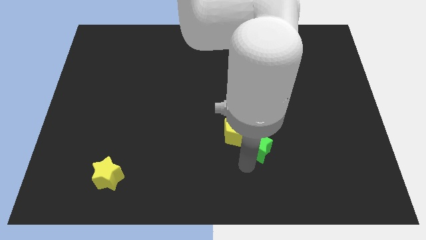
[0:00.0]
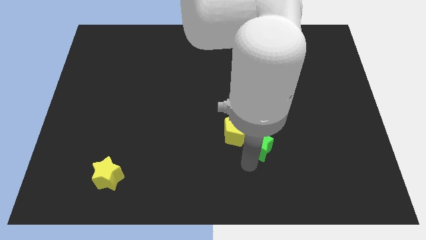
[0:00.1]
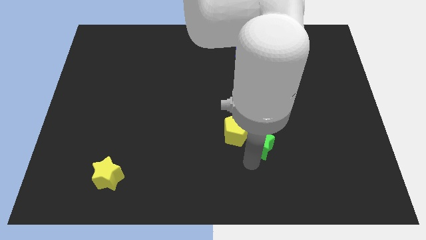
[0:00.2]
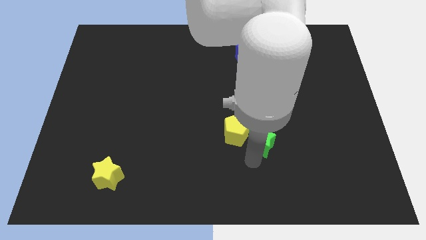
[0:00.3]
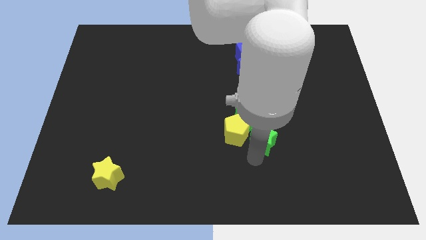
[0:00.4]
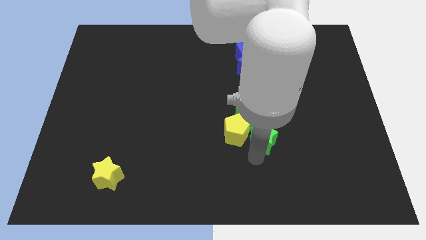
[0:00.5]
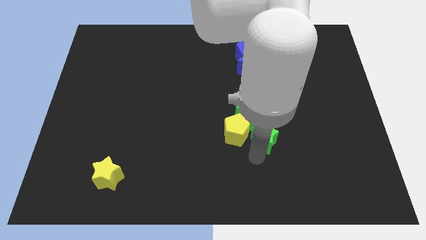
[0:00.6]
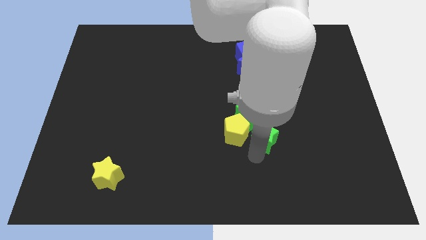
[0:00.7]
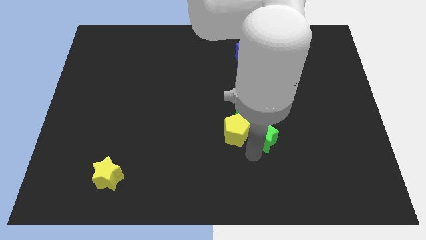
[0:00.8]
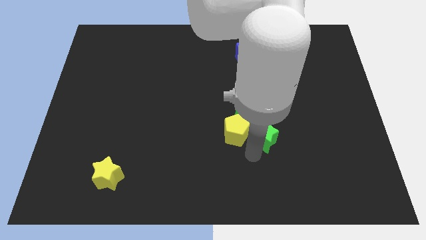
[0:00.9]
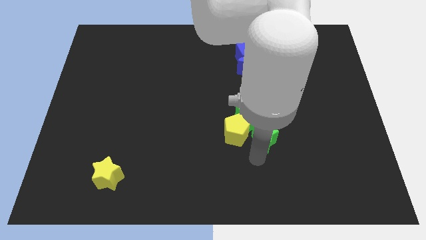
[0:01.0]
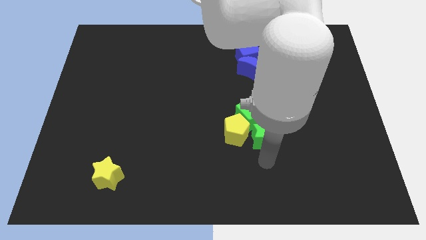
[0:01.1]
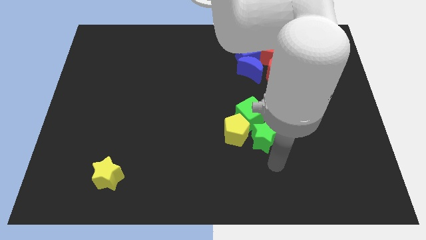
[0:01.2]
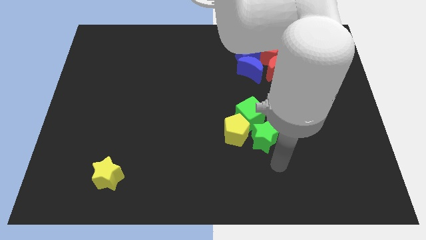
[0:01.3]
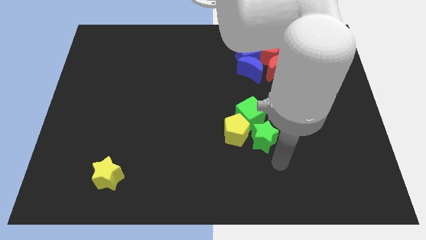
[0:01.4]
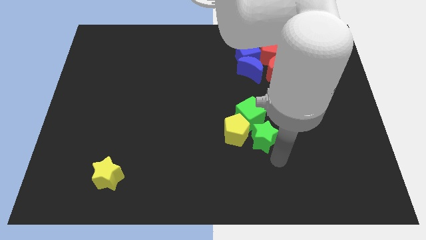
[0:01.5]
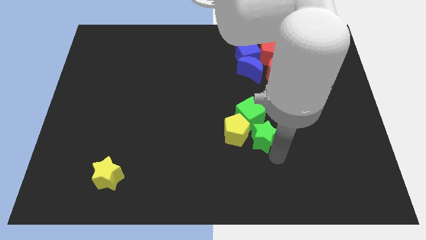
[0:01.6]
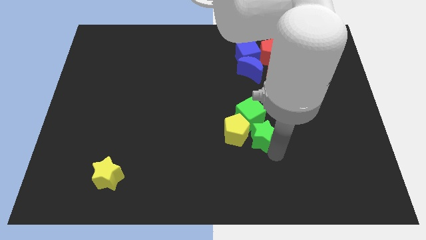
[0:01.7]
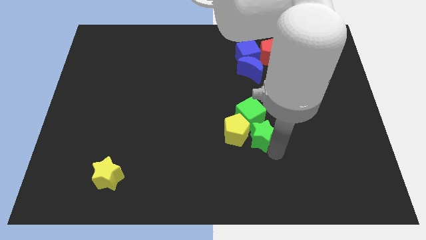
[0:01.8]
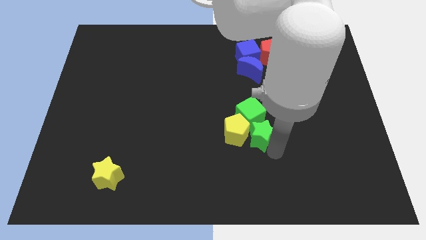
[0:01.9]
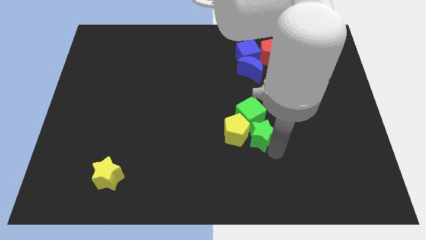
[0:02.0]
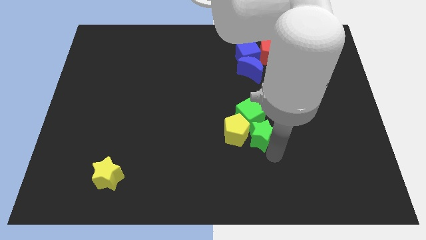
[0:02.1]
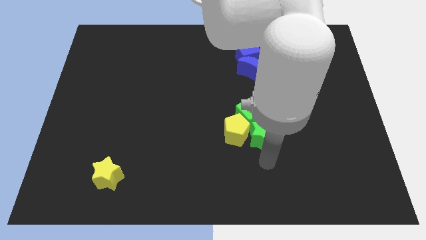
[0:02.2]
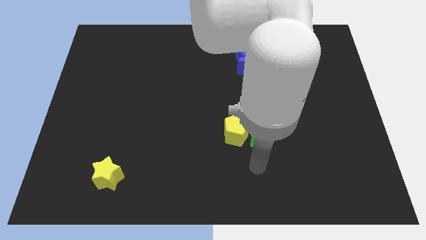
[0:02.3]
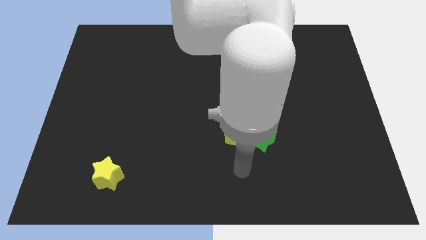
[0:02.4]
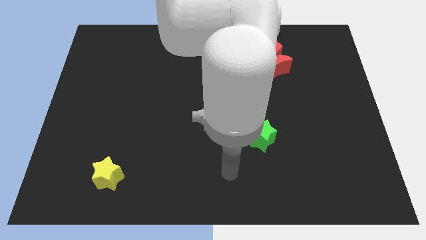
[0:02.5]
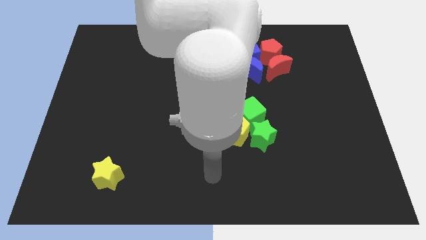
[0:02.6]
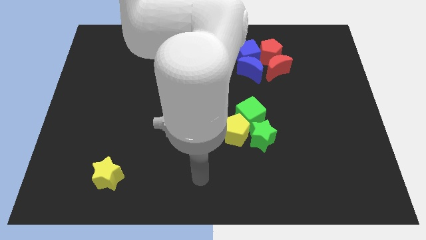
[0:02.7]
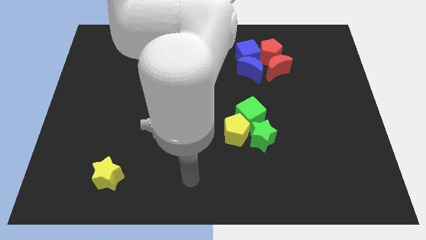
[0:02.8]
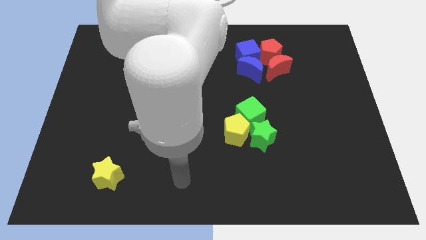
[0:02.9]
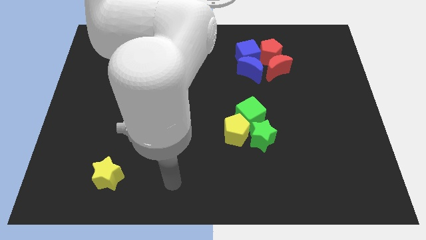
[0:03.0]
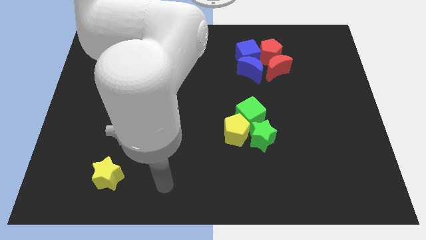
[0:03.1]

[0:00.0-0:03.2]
move the green star at the bottom of the green cube

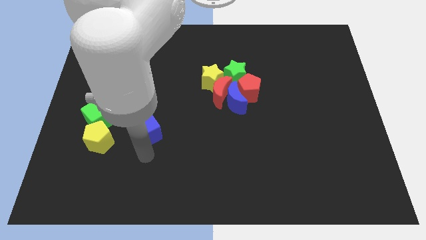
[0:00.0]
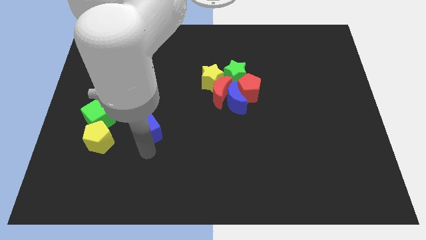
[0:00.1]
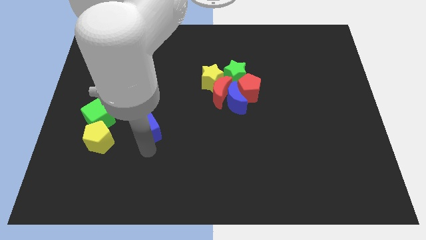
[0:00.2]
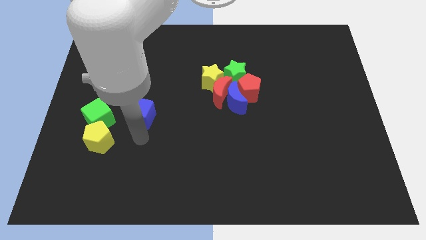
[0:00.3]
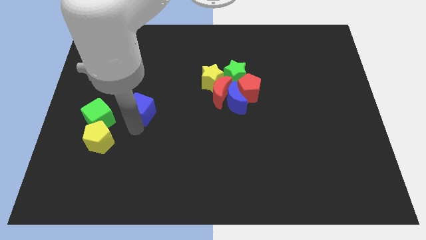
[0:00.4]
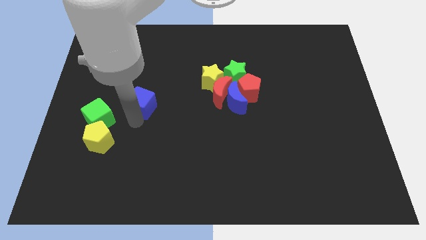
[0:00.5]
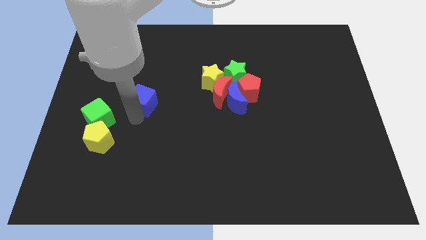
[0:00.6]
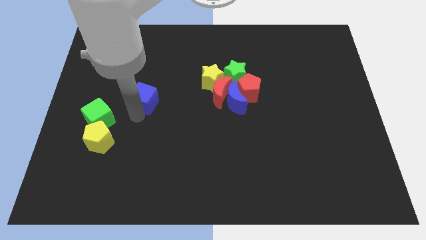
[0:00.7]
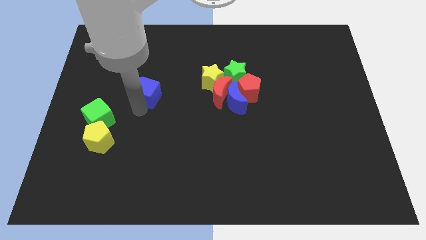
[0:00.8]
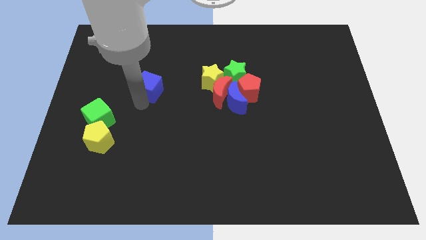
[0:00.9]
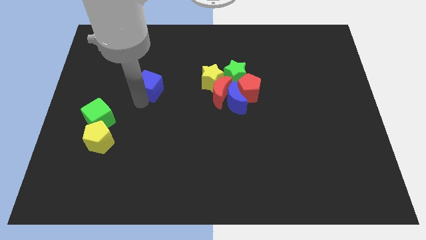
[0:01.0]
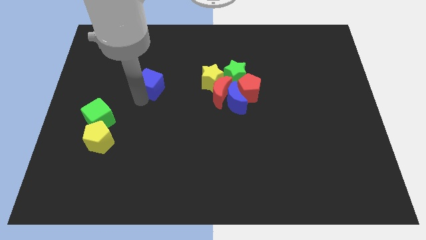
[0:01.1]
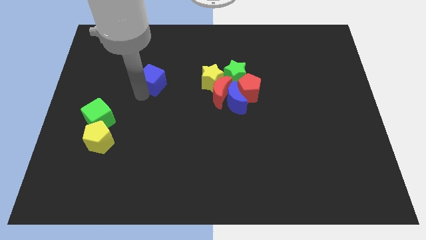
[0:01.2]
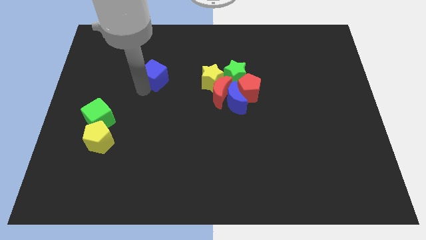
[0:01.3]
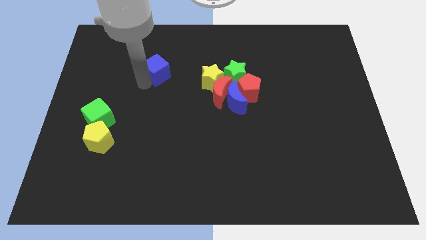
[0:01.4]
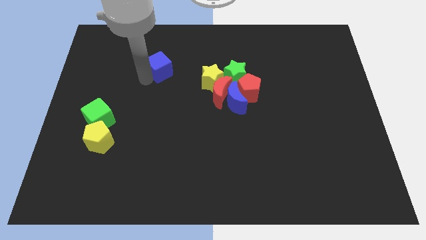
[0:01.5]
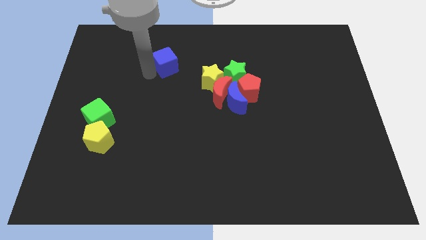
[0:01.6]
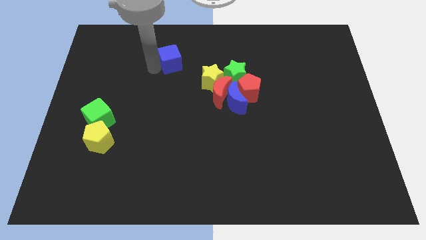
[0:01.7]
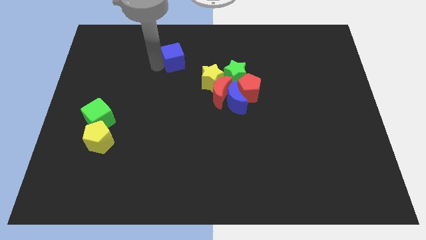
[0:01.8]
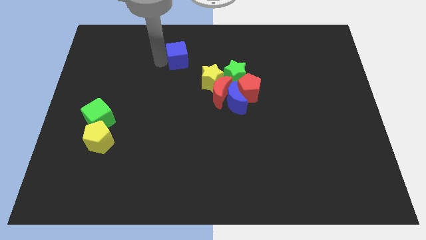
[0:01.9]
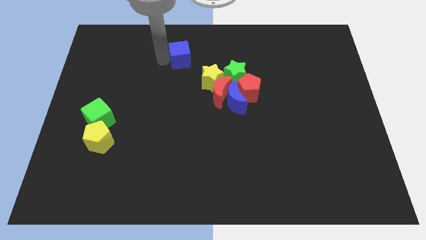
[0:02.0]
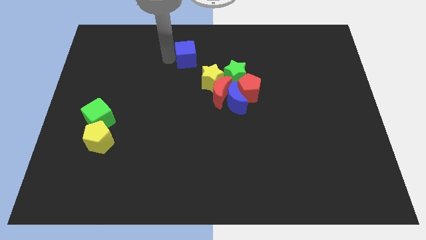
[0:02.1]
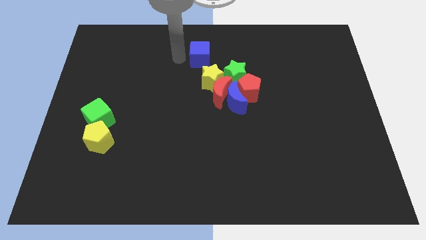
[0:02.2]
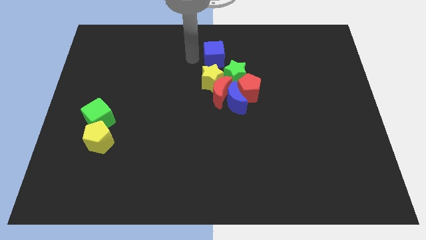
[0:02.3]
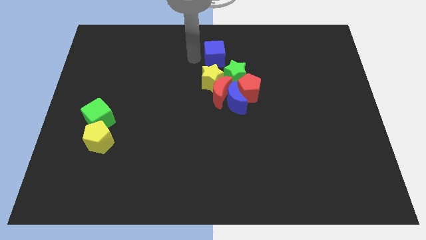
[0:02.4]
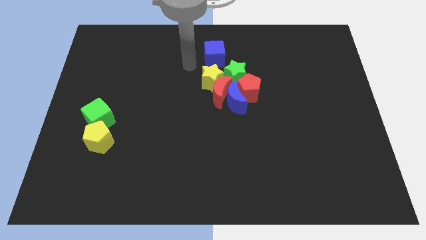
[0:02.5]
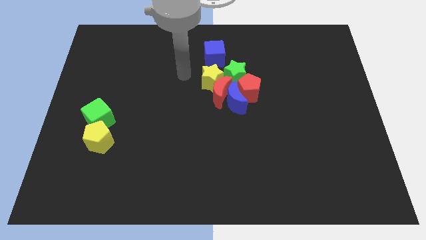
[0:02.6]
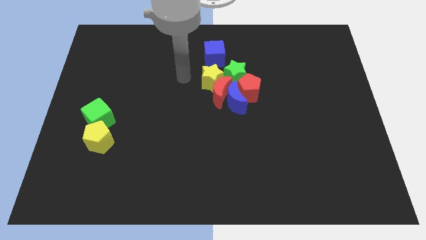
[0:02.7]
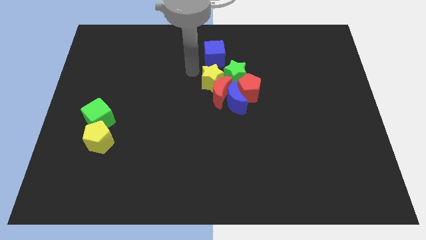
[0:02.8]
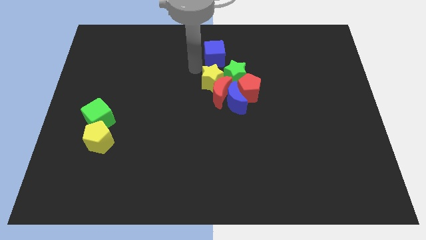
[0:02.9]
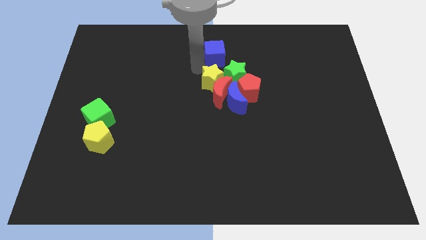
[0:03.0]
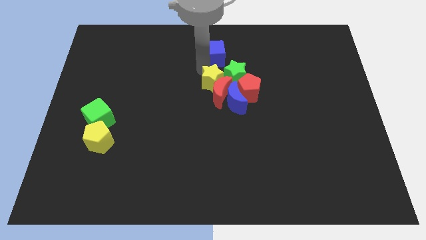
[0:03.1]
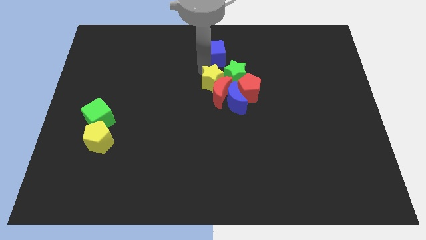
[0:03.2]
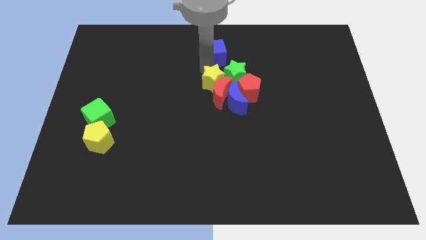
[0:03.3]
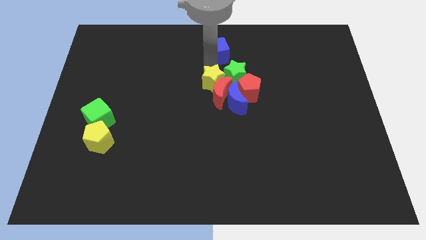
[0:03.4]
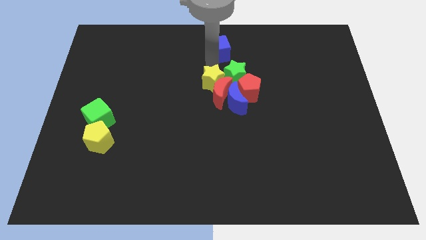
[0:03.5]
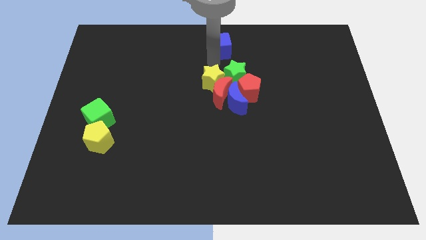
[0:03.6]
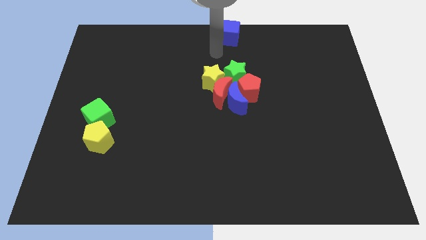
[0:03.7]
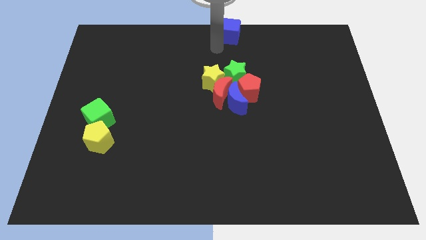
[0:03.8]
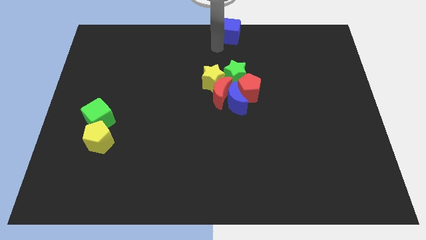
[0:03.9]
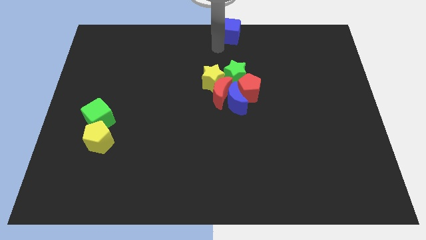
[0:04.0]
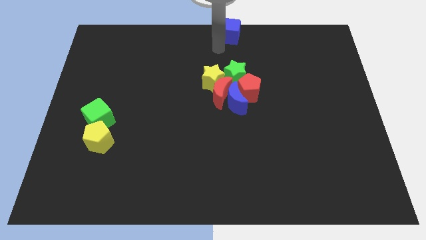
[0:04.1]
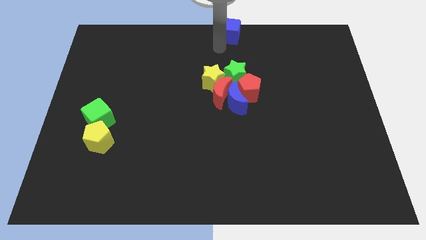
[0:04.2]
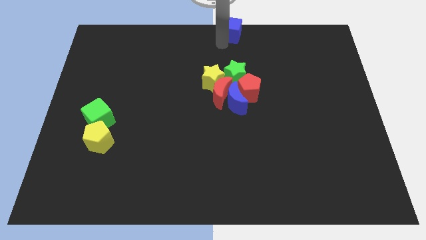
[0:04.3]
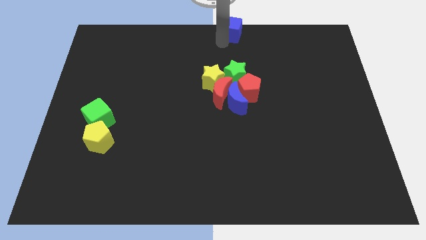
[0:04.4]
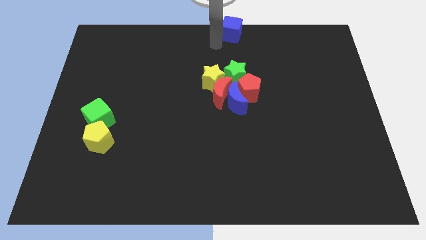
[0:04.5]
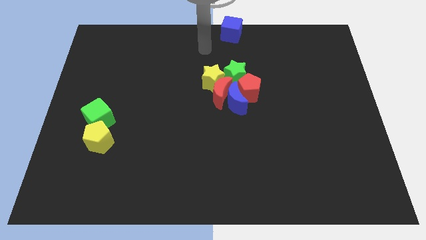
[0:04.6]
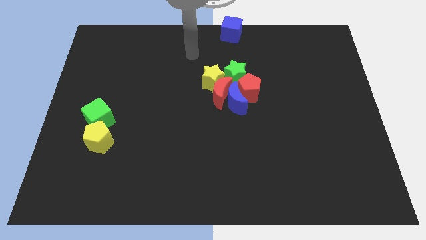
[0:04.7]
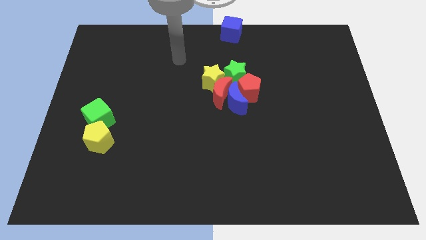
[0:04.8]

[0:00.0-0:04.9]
slide the blue cube to the top center of the board

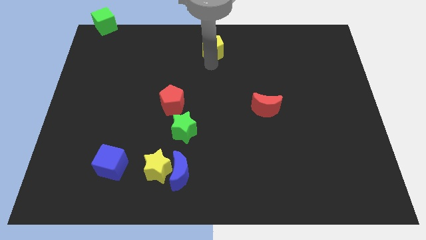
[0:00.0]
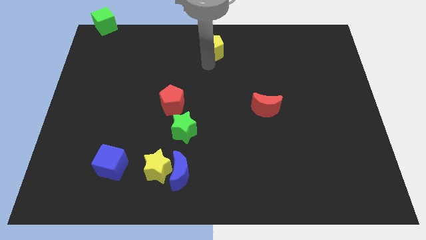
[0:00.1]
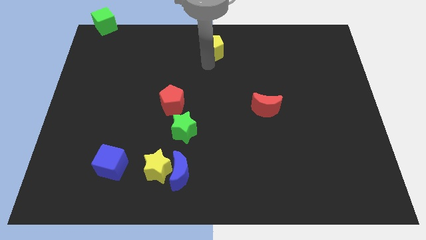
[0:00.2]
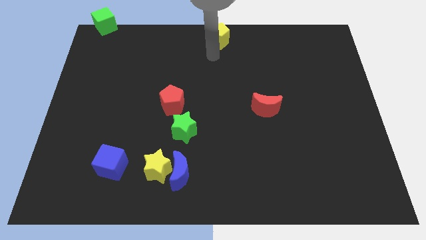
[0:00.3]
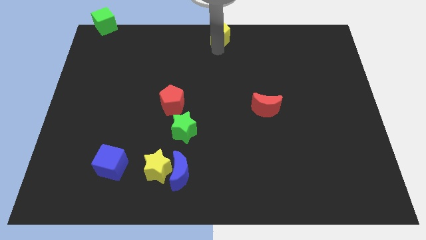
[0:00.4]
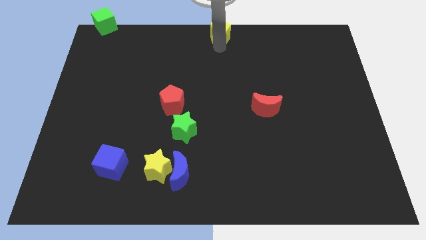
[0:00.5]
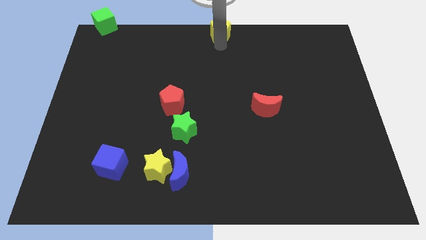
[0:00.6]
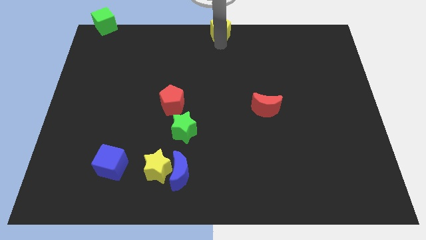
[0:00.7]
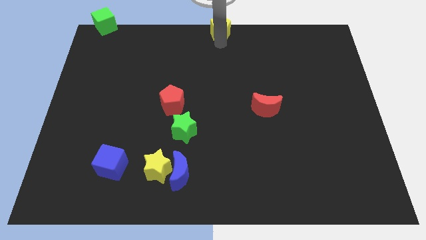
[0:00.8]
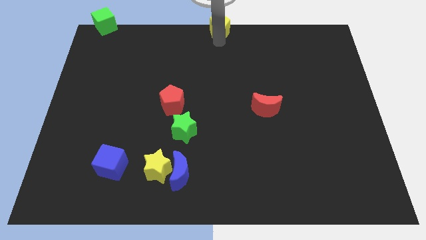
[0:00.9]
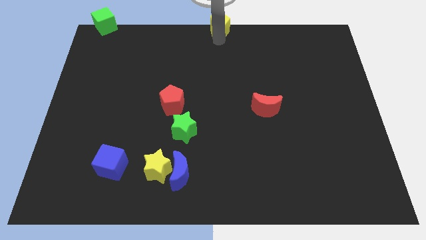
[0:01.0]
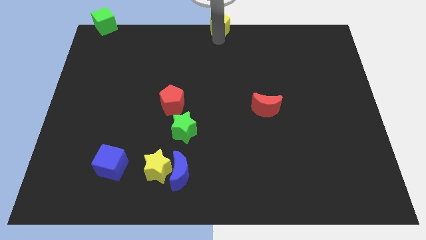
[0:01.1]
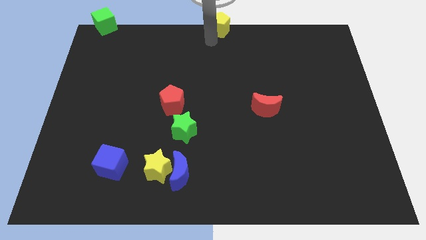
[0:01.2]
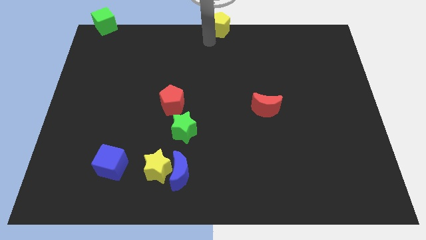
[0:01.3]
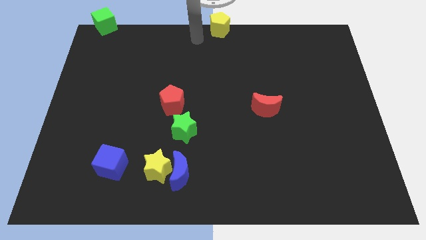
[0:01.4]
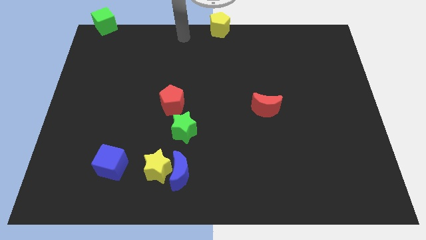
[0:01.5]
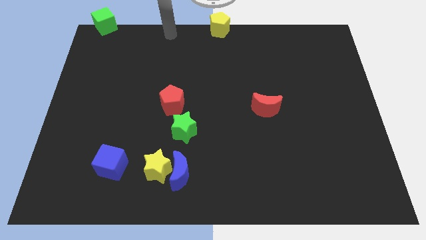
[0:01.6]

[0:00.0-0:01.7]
push the yellow pentagon to the top center
